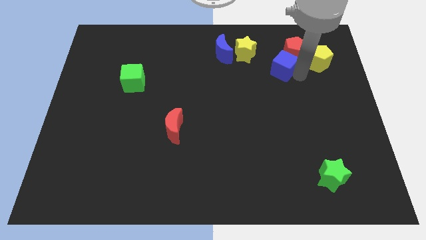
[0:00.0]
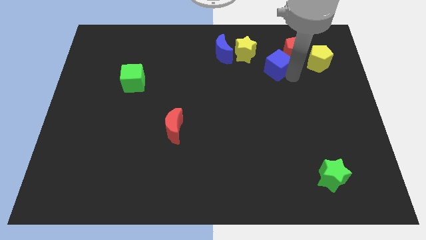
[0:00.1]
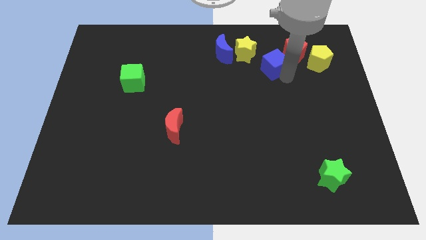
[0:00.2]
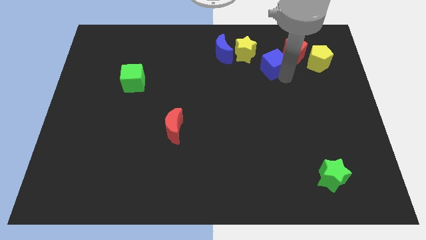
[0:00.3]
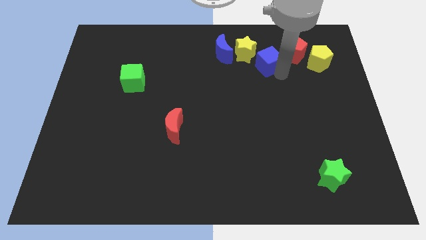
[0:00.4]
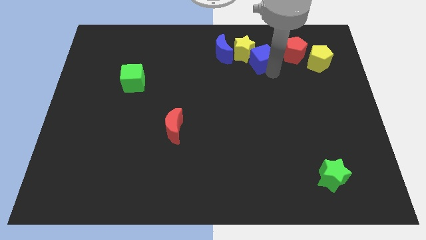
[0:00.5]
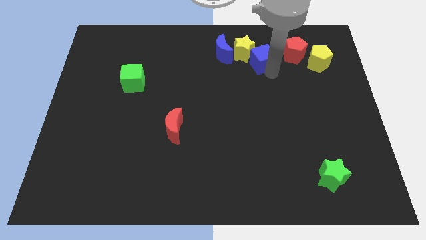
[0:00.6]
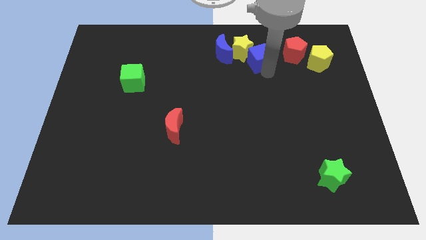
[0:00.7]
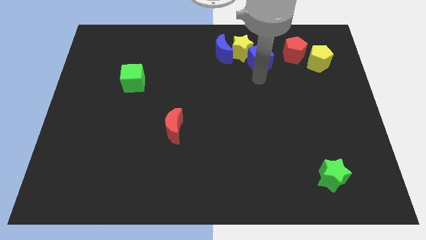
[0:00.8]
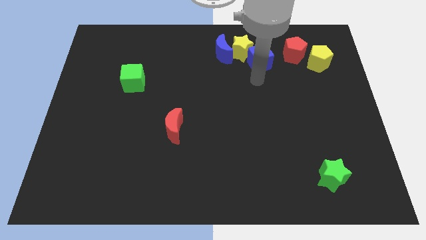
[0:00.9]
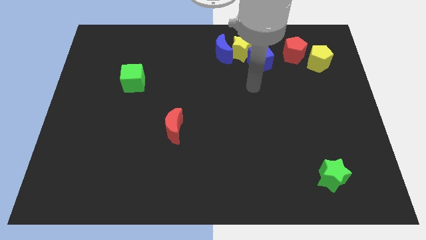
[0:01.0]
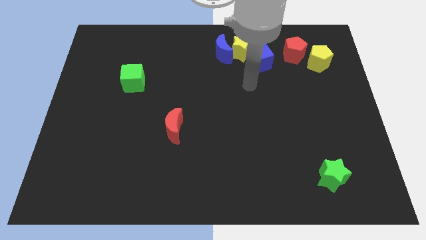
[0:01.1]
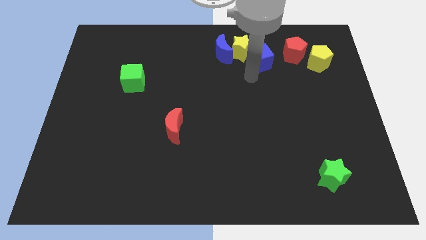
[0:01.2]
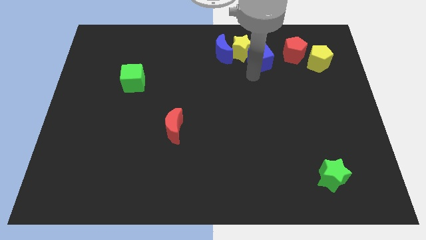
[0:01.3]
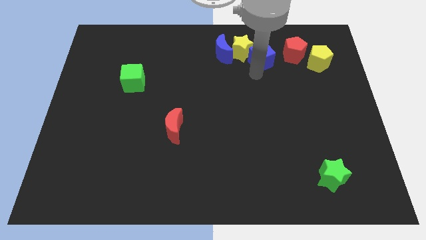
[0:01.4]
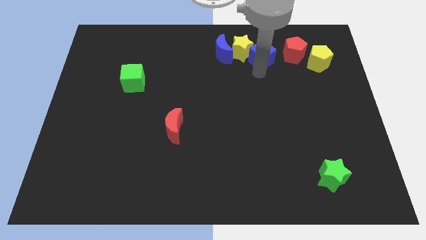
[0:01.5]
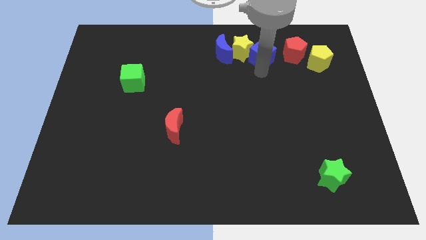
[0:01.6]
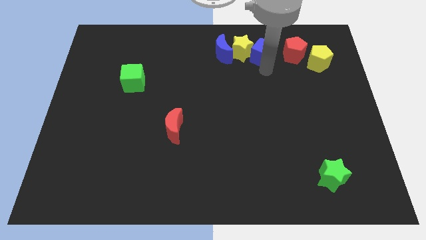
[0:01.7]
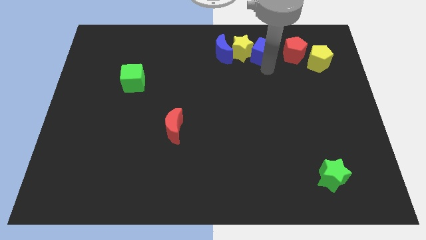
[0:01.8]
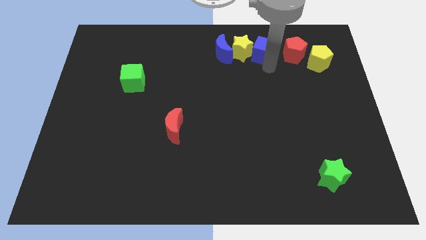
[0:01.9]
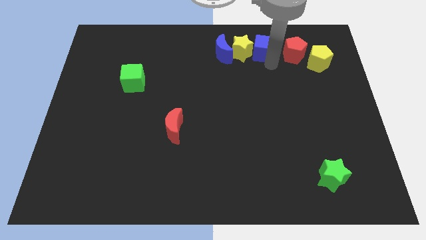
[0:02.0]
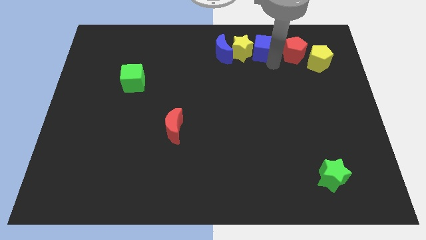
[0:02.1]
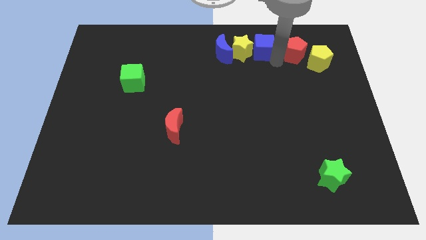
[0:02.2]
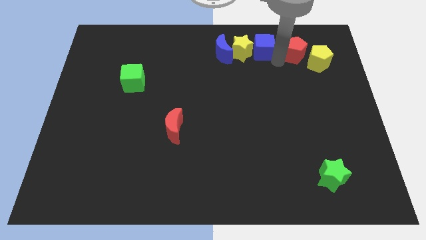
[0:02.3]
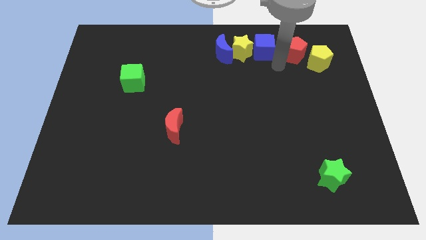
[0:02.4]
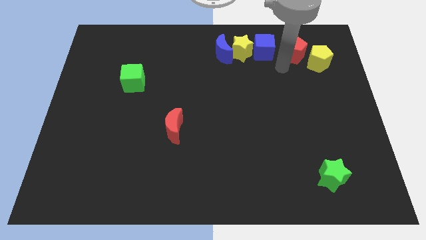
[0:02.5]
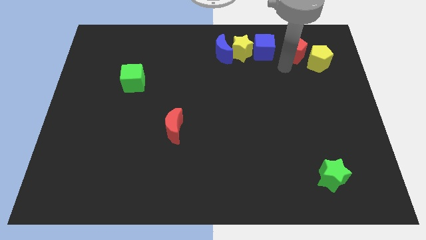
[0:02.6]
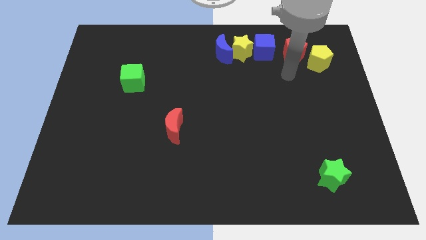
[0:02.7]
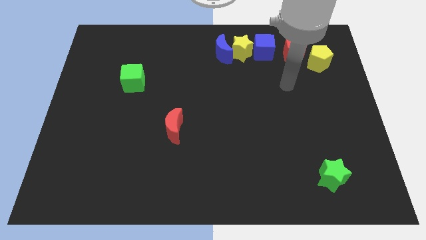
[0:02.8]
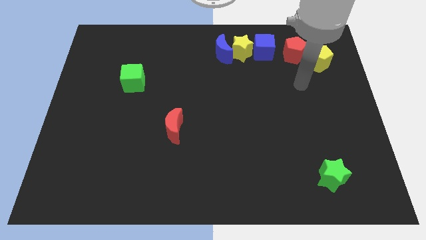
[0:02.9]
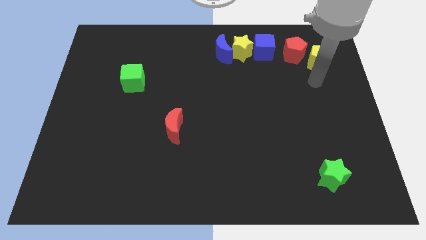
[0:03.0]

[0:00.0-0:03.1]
place the blue cube in between the red pentagon and yellow star

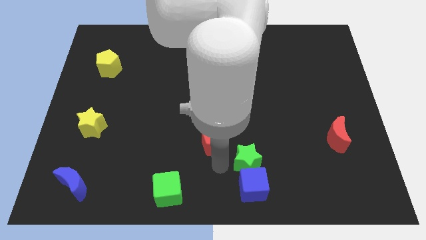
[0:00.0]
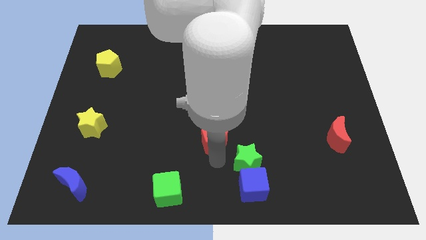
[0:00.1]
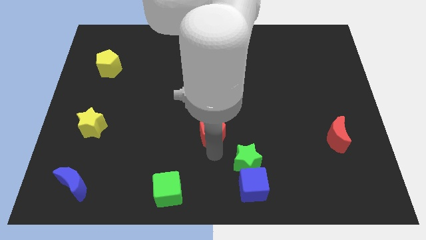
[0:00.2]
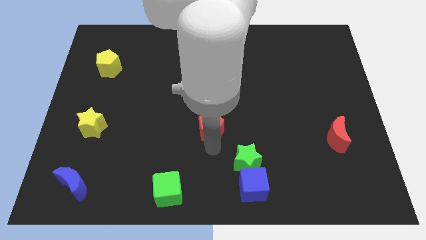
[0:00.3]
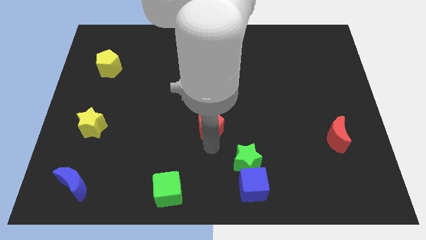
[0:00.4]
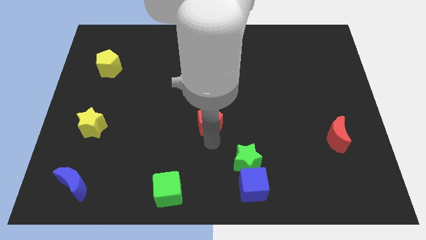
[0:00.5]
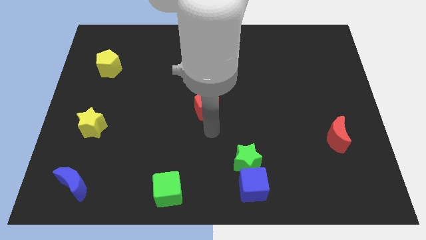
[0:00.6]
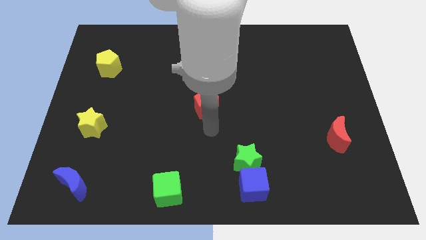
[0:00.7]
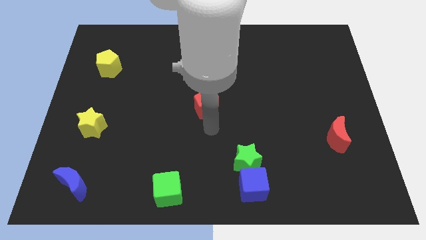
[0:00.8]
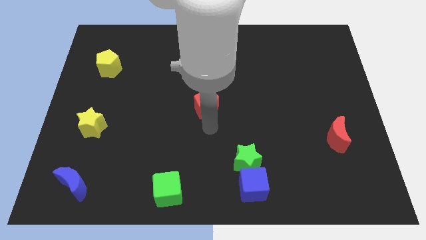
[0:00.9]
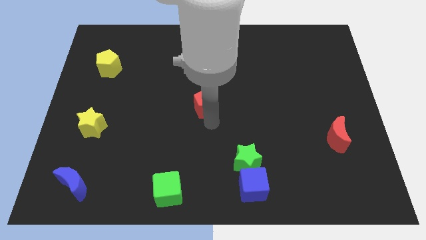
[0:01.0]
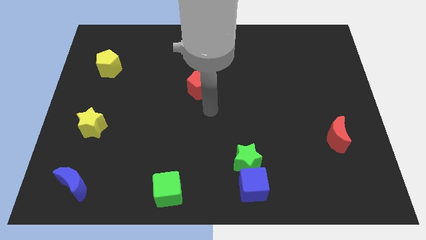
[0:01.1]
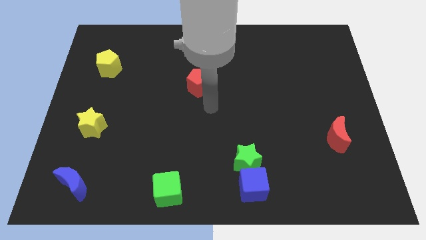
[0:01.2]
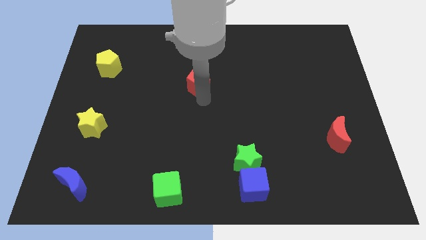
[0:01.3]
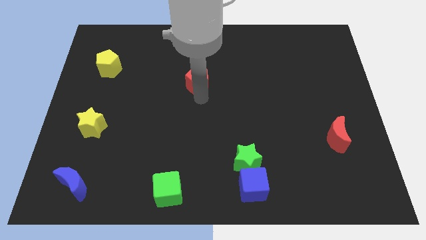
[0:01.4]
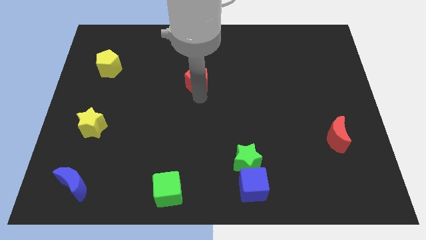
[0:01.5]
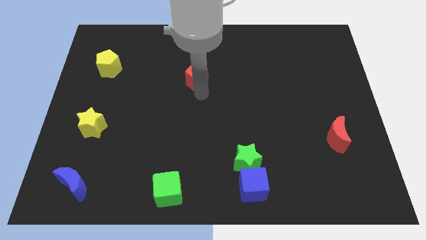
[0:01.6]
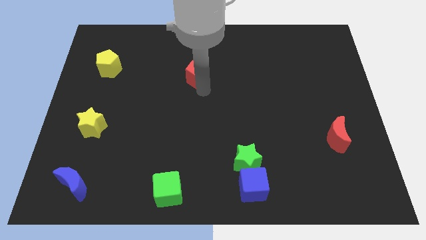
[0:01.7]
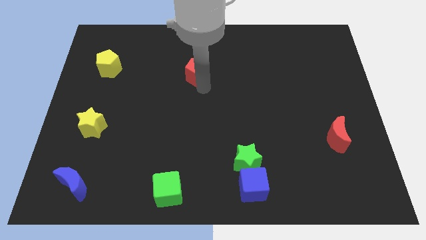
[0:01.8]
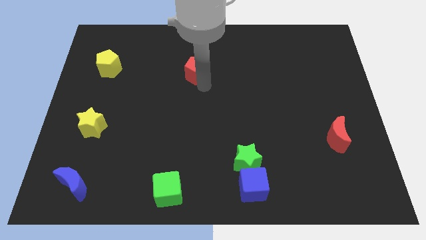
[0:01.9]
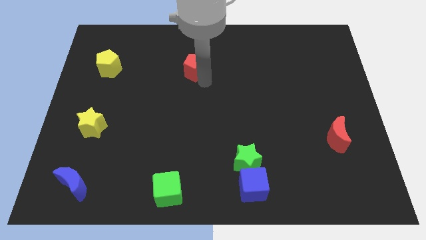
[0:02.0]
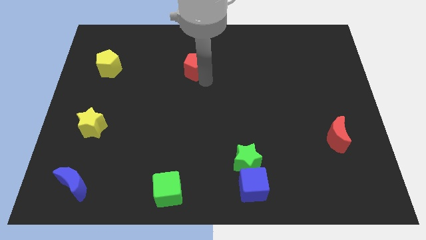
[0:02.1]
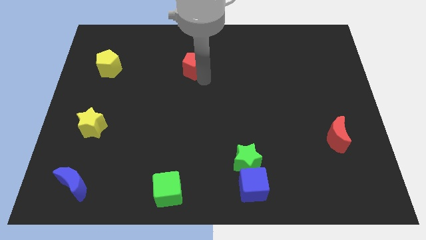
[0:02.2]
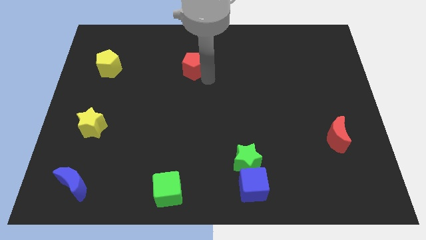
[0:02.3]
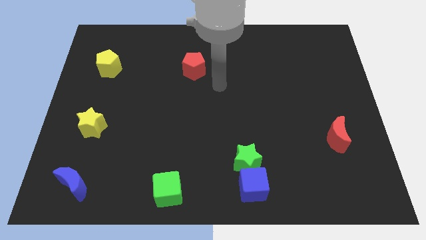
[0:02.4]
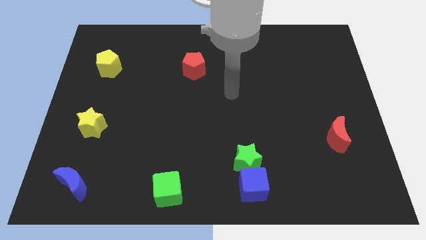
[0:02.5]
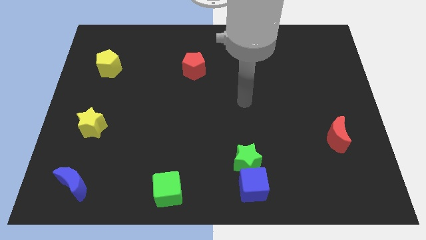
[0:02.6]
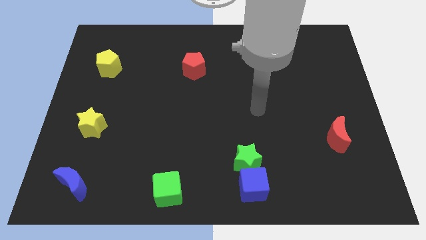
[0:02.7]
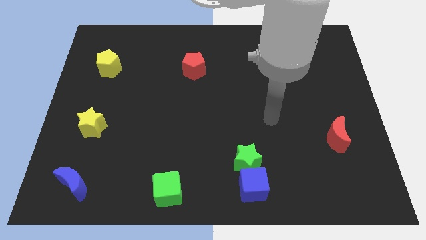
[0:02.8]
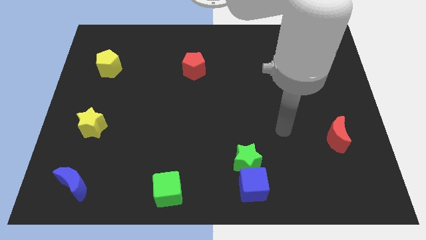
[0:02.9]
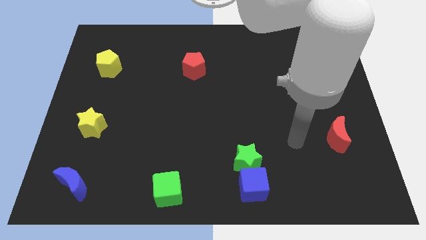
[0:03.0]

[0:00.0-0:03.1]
slide red pentagon towards top center

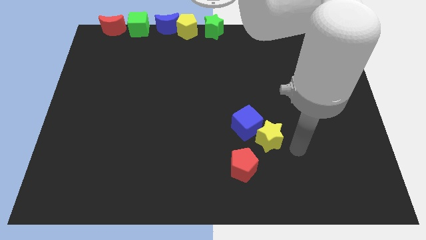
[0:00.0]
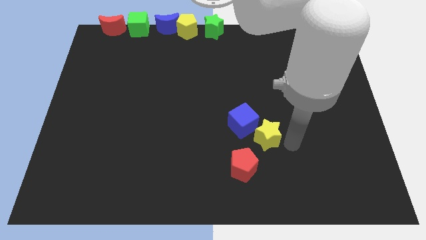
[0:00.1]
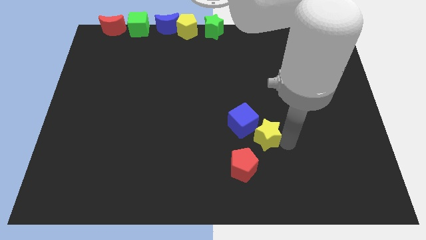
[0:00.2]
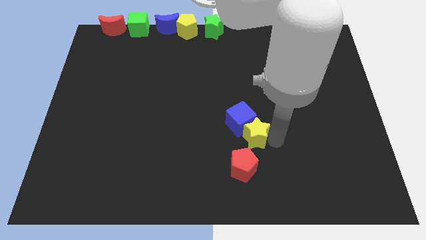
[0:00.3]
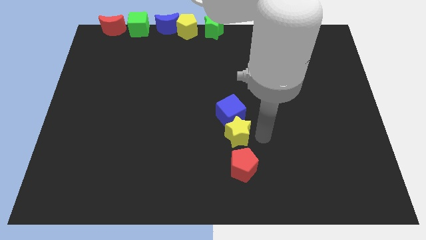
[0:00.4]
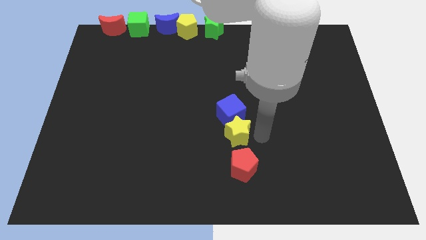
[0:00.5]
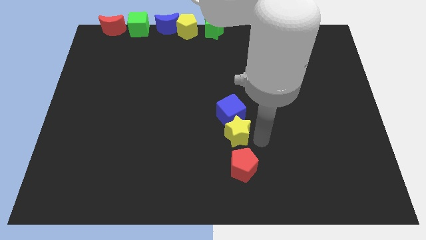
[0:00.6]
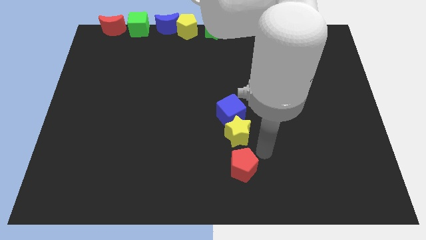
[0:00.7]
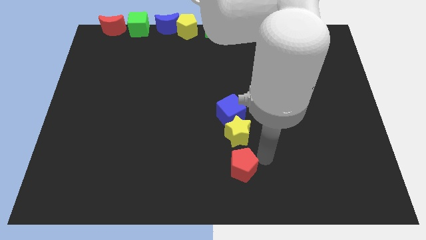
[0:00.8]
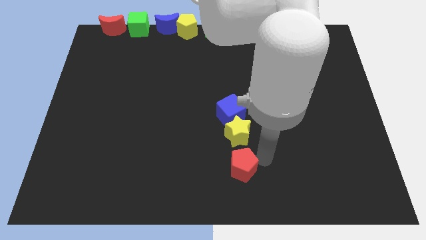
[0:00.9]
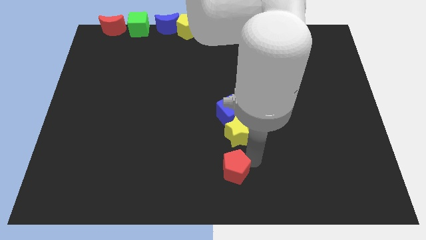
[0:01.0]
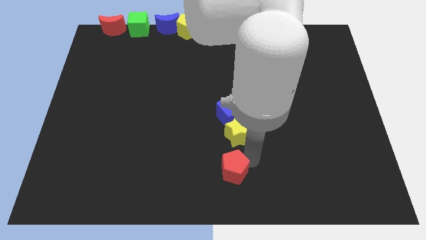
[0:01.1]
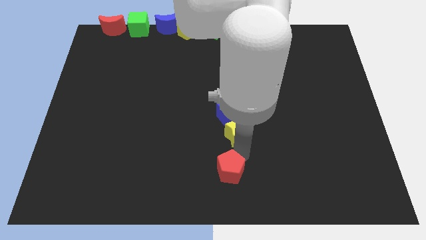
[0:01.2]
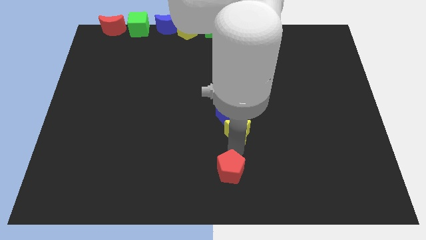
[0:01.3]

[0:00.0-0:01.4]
push the yellow star to the top of the red pentagon along with the blue cube

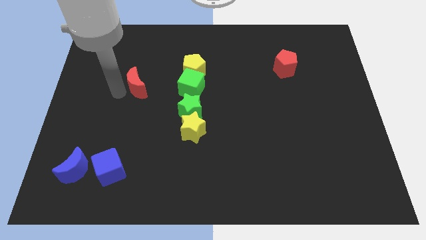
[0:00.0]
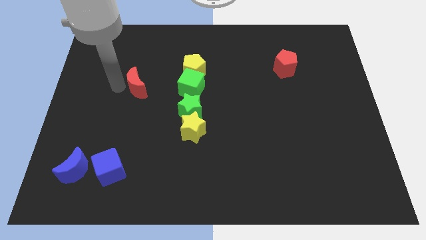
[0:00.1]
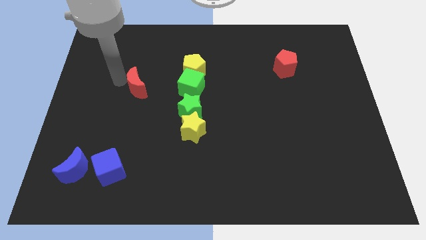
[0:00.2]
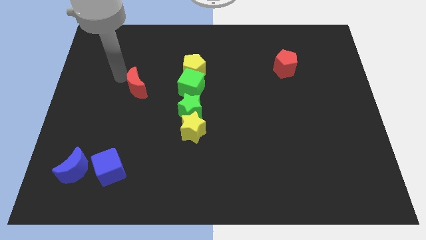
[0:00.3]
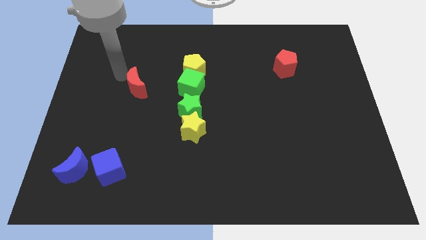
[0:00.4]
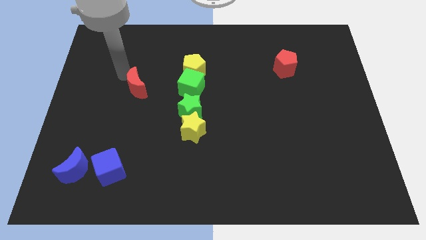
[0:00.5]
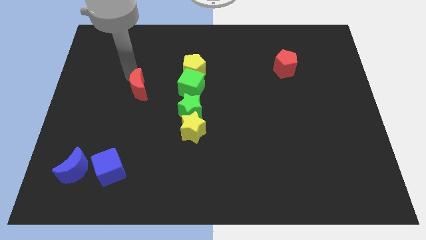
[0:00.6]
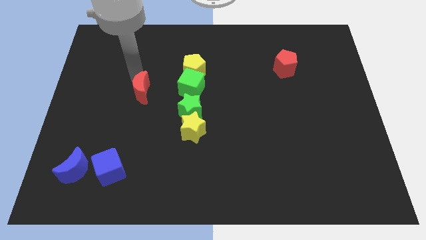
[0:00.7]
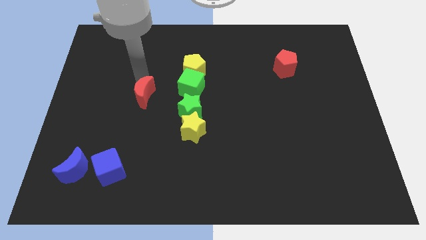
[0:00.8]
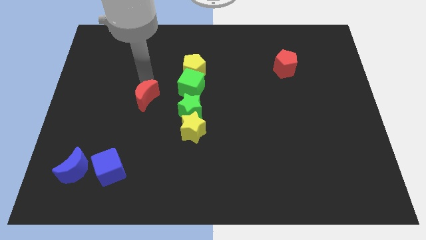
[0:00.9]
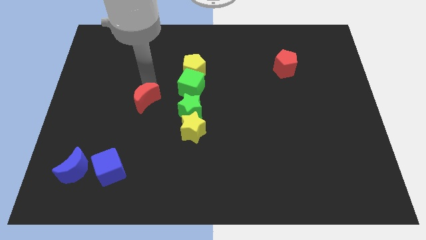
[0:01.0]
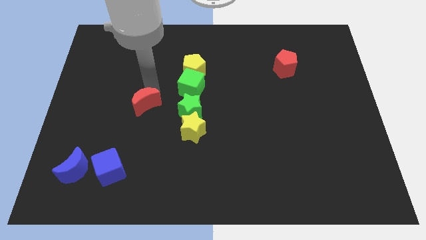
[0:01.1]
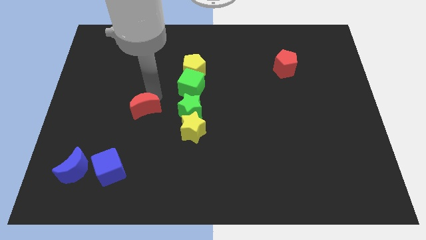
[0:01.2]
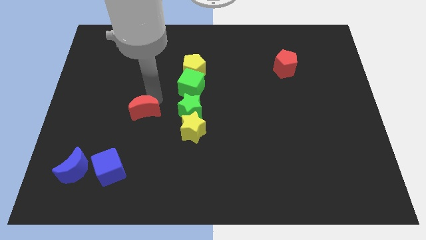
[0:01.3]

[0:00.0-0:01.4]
place red moon to the left of green star
